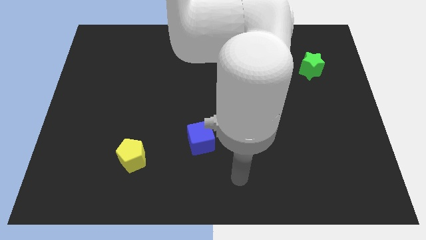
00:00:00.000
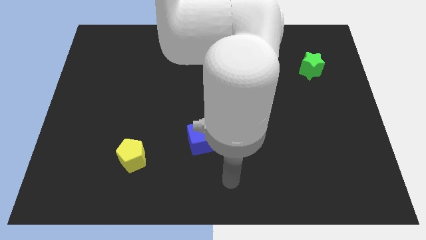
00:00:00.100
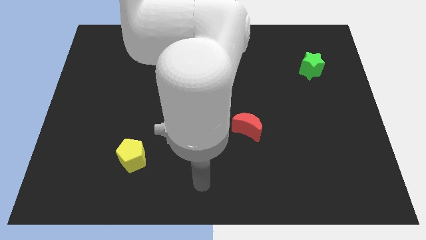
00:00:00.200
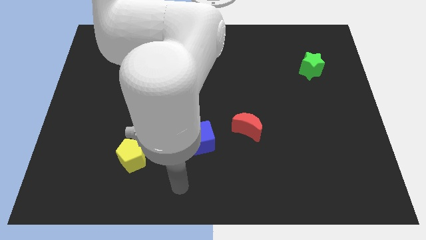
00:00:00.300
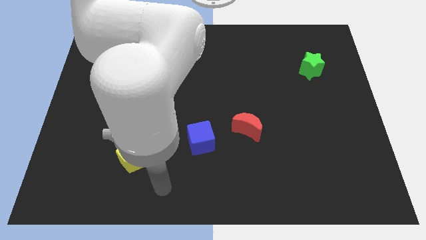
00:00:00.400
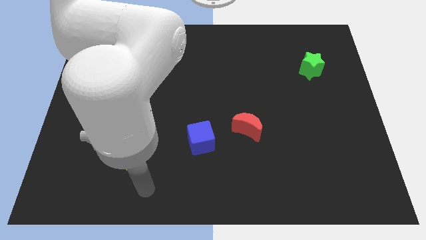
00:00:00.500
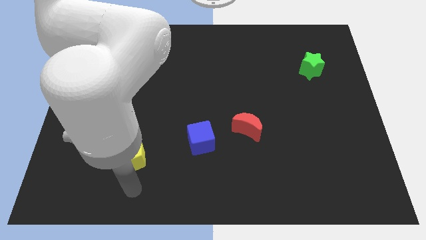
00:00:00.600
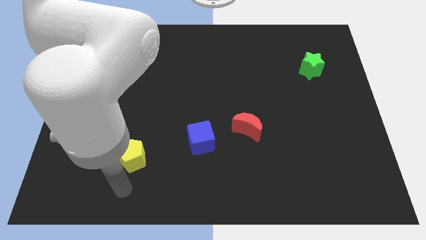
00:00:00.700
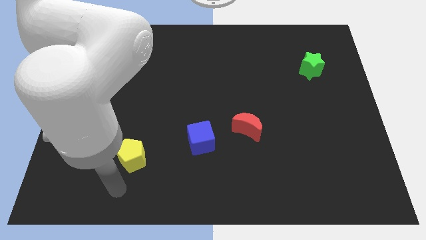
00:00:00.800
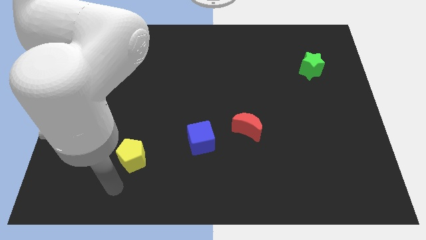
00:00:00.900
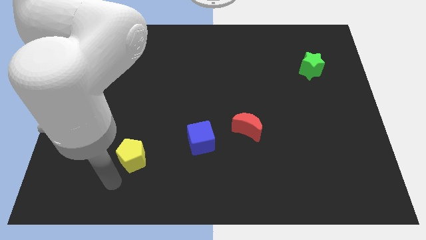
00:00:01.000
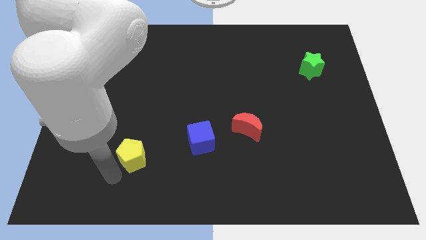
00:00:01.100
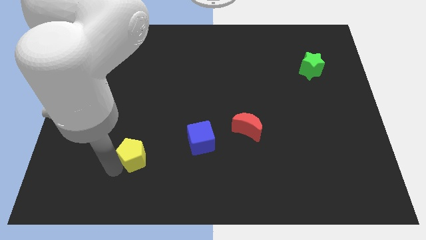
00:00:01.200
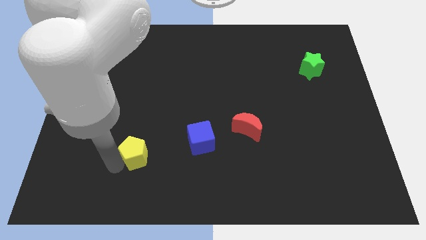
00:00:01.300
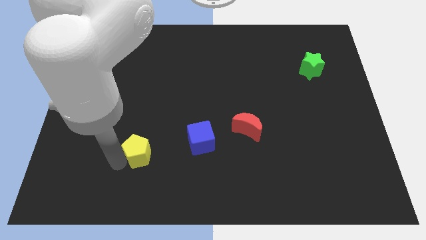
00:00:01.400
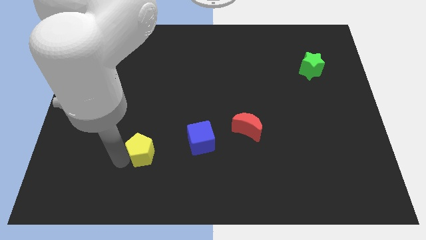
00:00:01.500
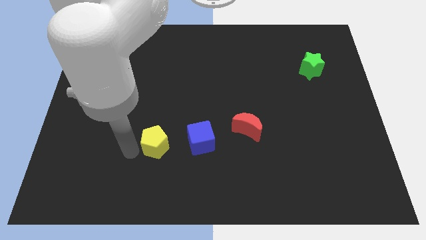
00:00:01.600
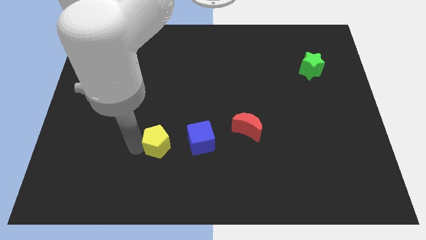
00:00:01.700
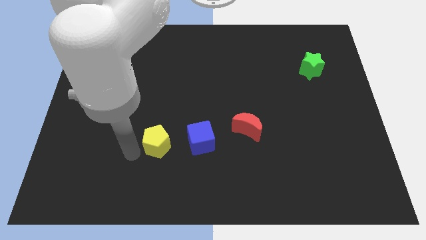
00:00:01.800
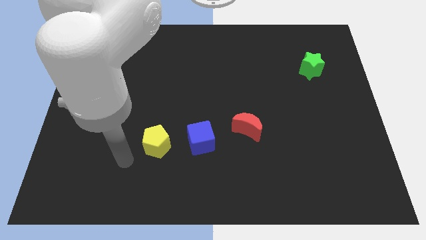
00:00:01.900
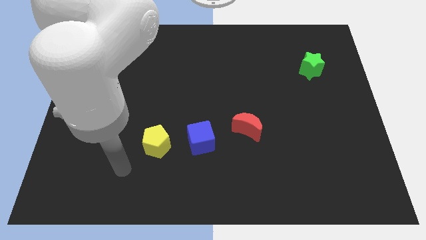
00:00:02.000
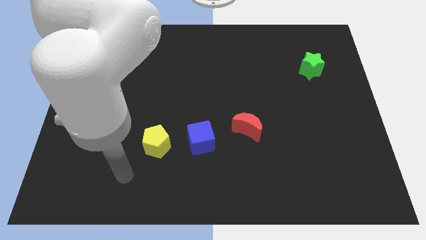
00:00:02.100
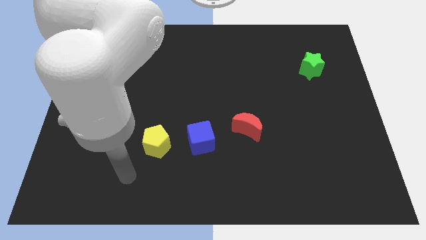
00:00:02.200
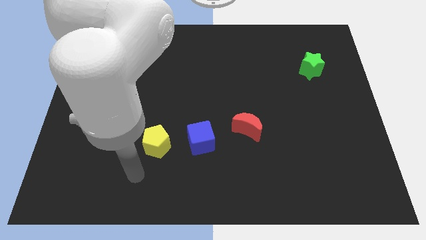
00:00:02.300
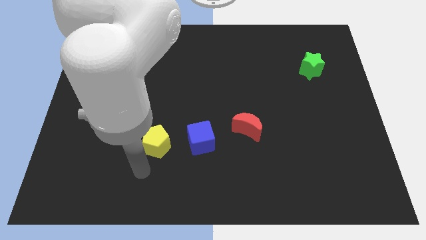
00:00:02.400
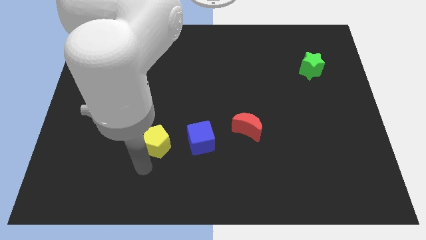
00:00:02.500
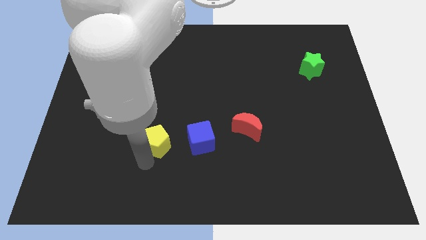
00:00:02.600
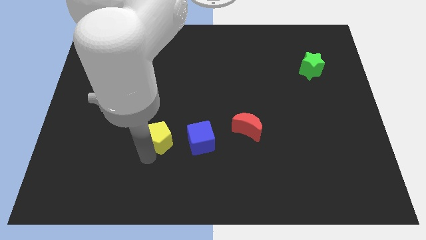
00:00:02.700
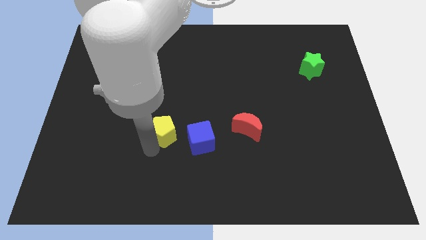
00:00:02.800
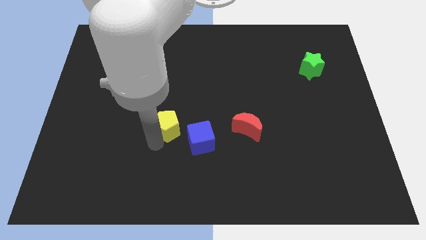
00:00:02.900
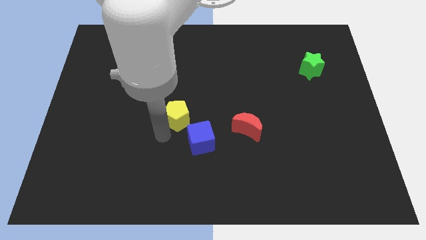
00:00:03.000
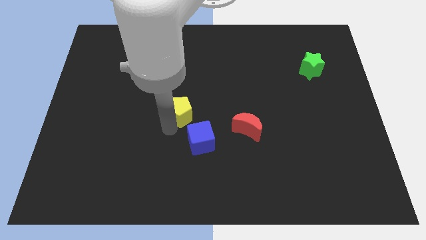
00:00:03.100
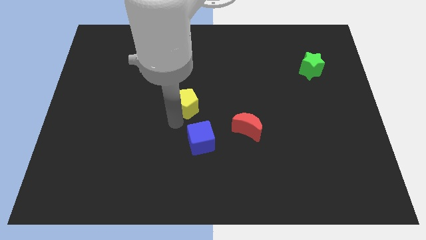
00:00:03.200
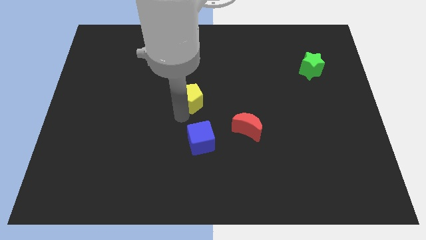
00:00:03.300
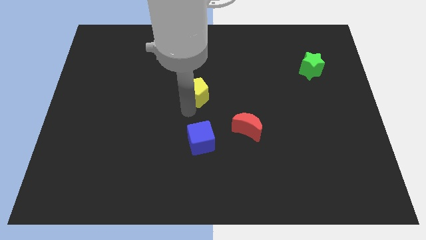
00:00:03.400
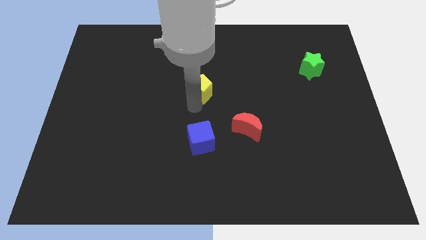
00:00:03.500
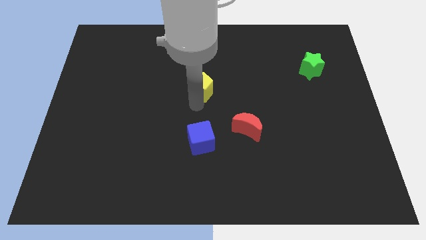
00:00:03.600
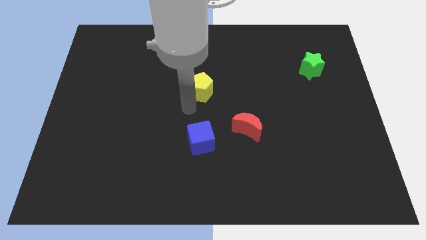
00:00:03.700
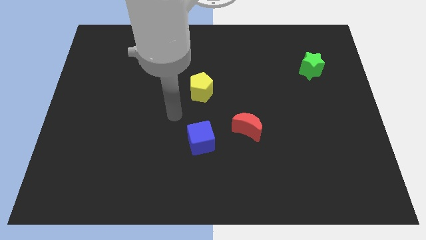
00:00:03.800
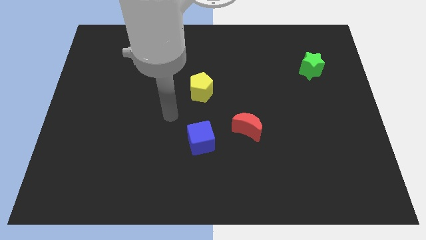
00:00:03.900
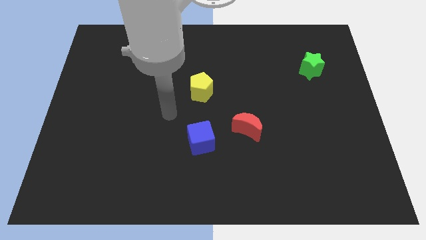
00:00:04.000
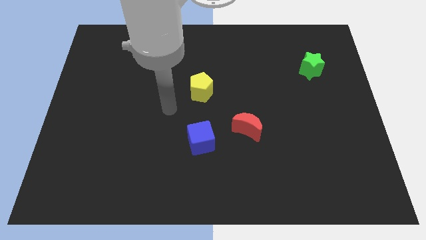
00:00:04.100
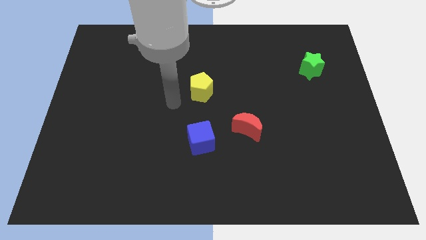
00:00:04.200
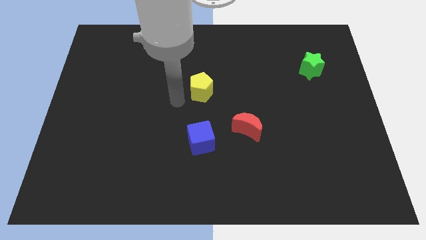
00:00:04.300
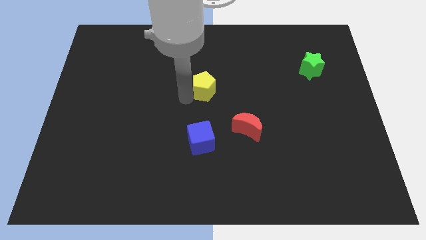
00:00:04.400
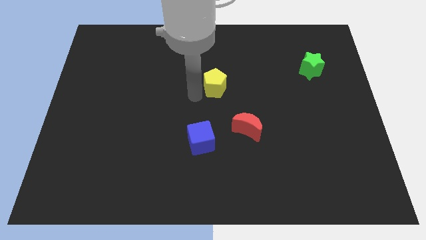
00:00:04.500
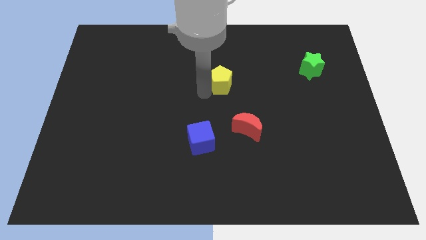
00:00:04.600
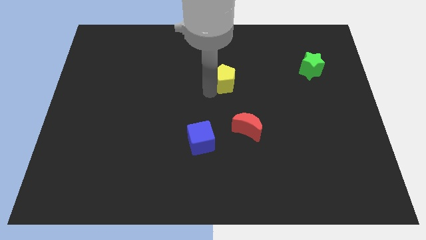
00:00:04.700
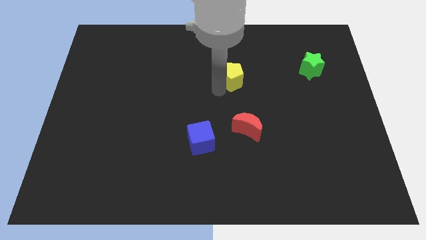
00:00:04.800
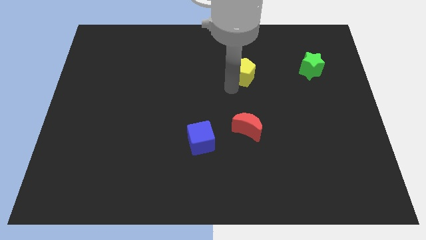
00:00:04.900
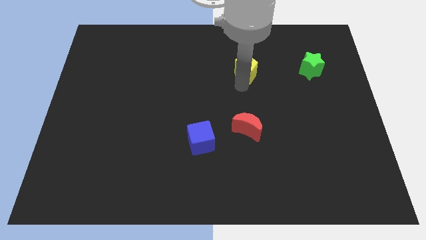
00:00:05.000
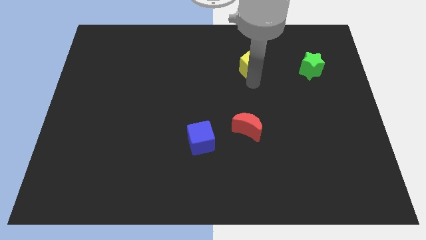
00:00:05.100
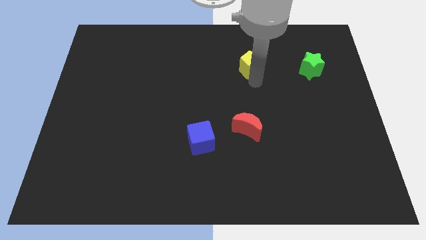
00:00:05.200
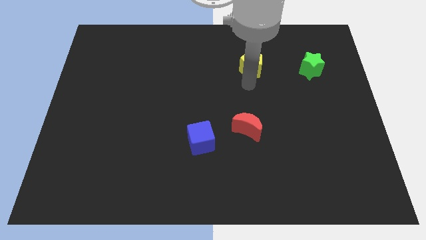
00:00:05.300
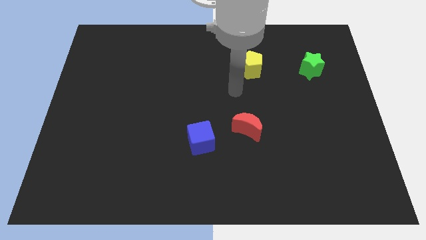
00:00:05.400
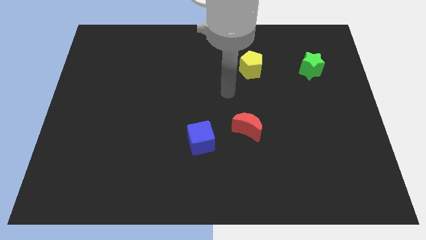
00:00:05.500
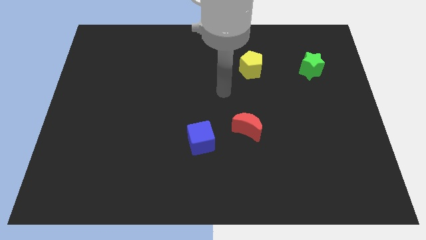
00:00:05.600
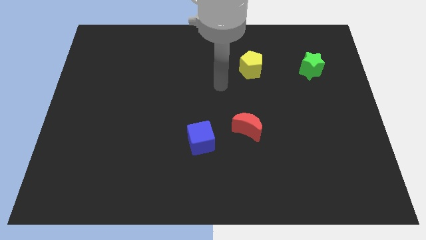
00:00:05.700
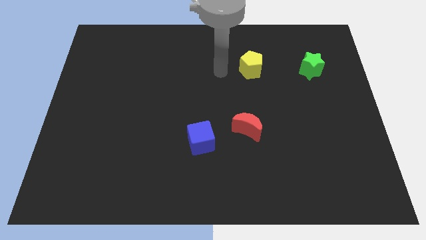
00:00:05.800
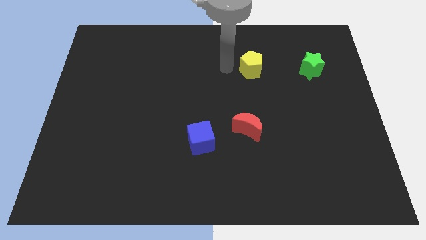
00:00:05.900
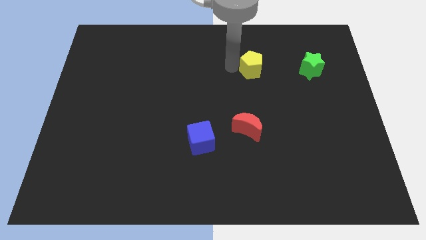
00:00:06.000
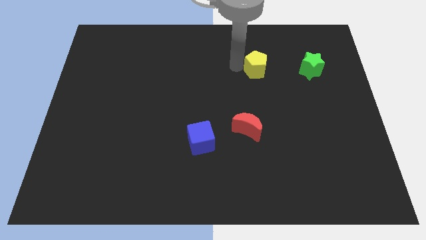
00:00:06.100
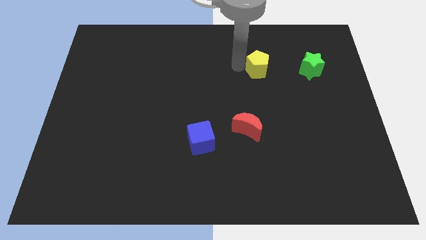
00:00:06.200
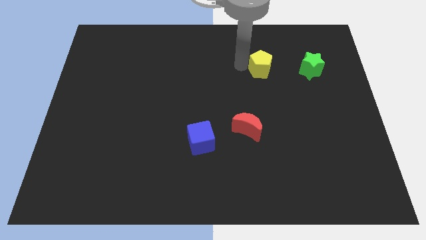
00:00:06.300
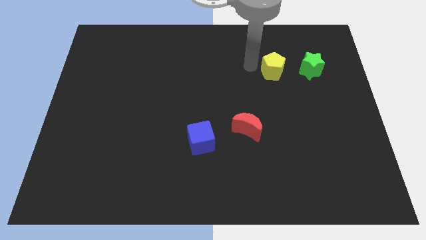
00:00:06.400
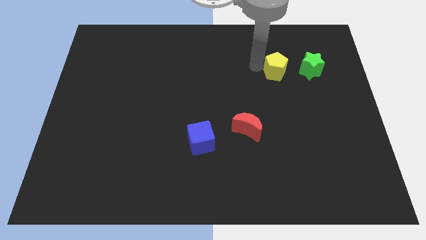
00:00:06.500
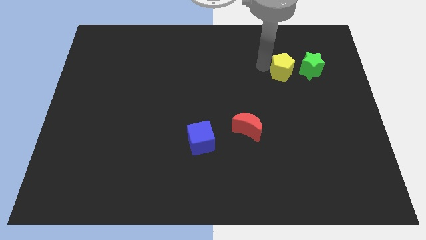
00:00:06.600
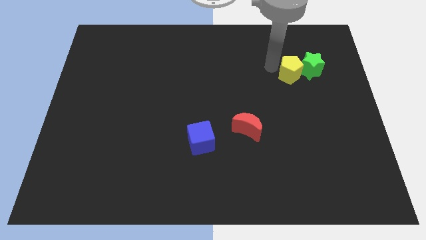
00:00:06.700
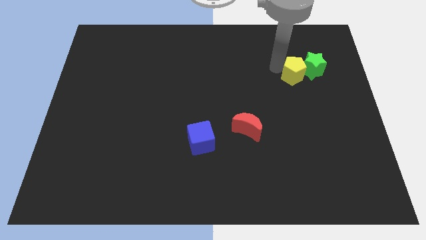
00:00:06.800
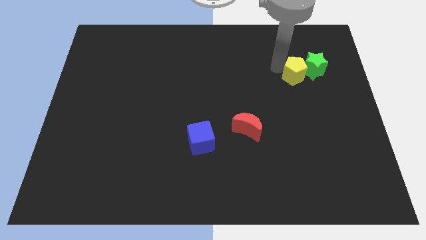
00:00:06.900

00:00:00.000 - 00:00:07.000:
put the yellow pentagon towards the green block

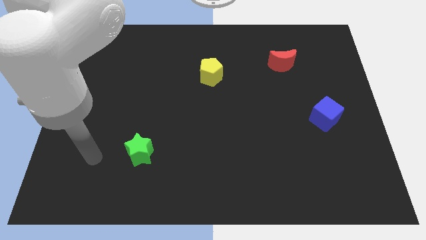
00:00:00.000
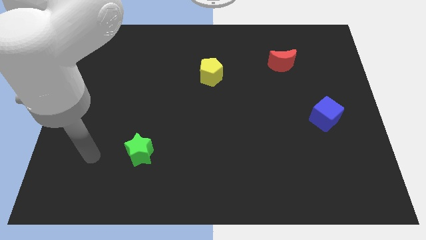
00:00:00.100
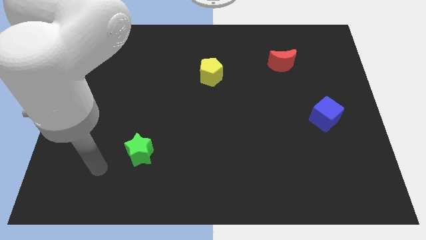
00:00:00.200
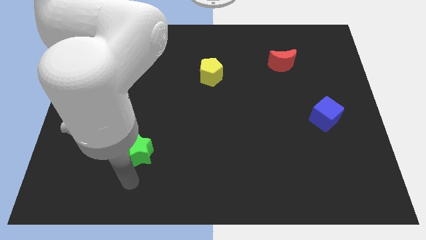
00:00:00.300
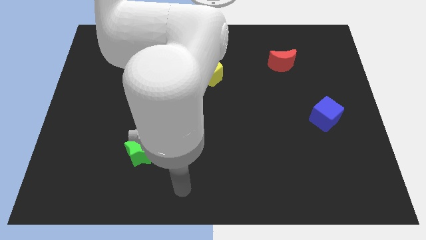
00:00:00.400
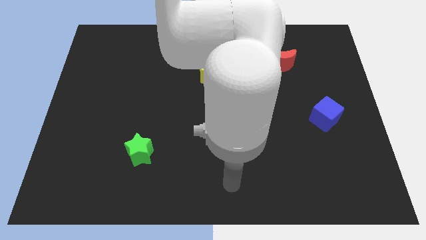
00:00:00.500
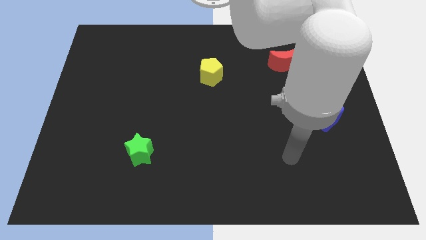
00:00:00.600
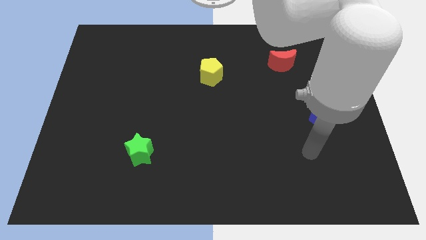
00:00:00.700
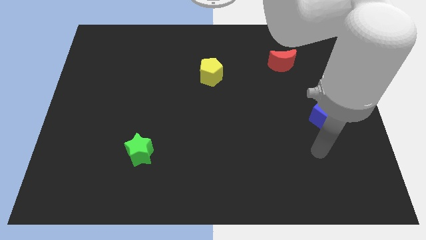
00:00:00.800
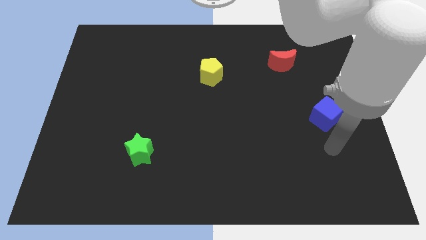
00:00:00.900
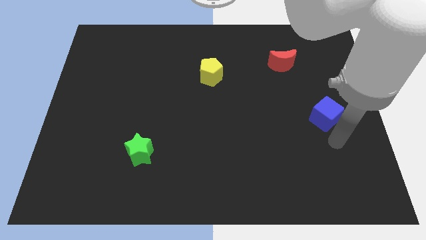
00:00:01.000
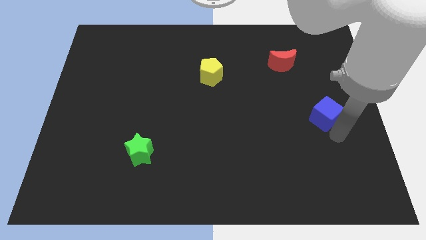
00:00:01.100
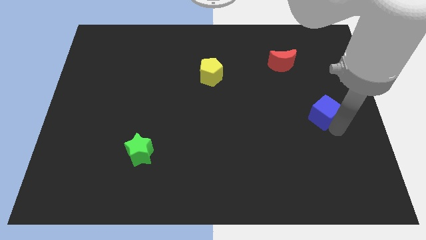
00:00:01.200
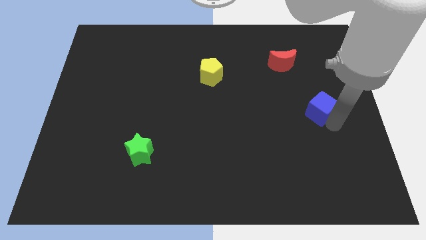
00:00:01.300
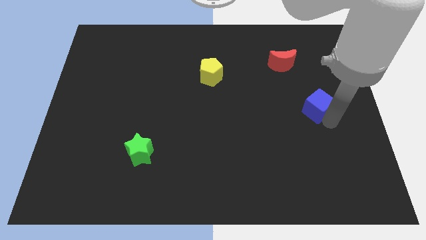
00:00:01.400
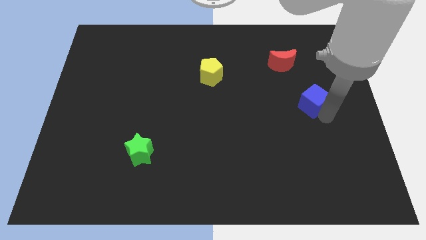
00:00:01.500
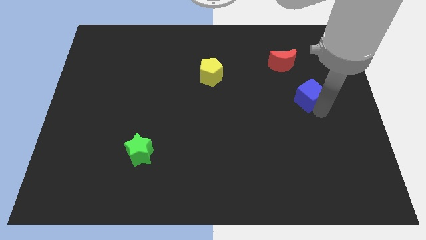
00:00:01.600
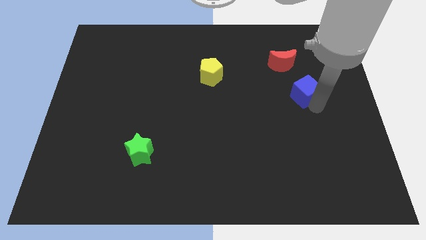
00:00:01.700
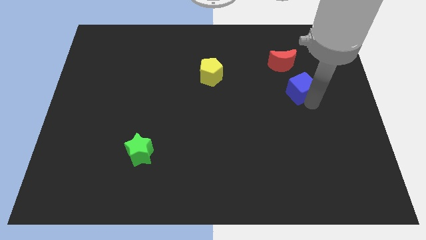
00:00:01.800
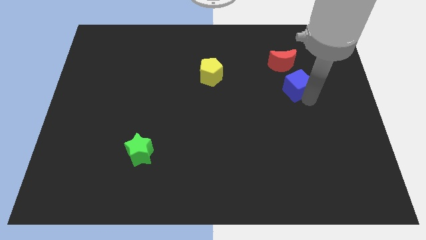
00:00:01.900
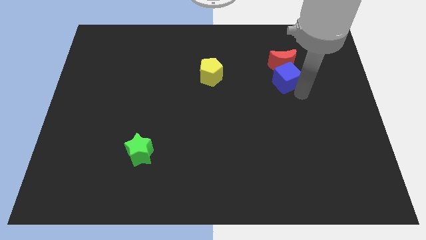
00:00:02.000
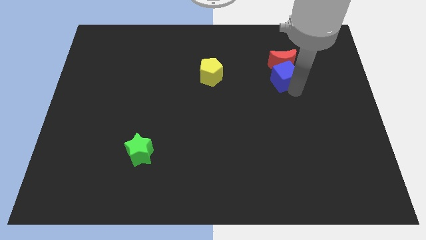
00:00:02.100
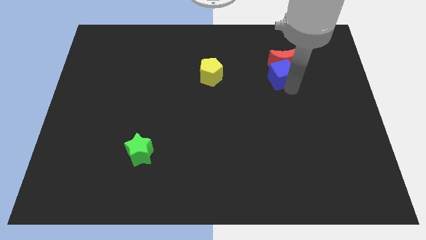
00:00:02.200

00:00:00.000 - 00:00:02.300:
push the blue cube close to the moon
